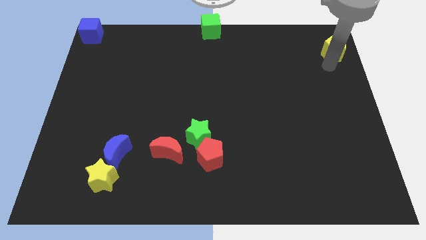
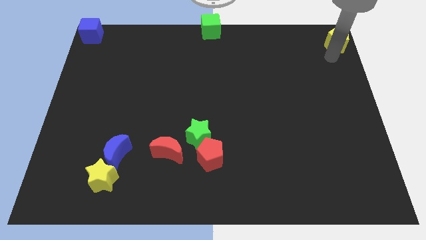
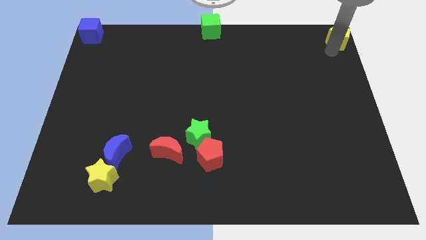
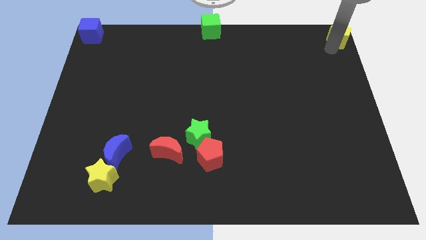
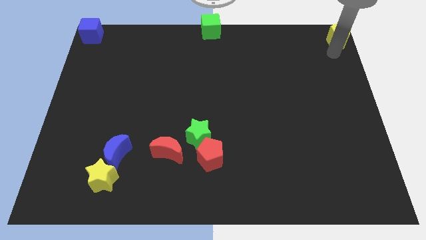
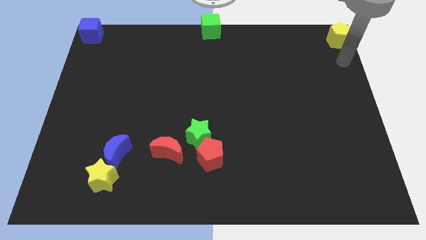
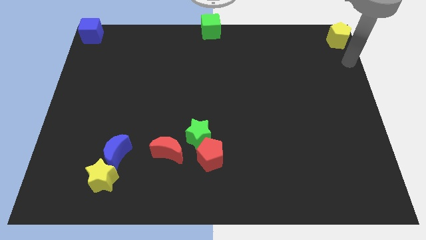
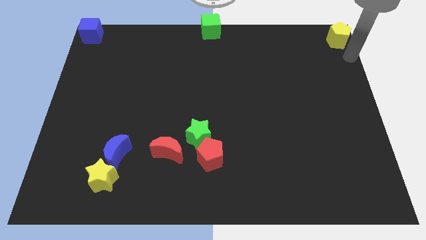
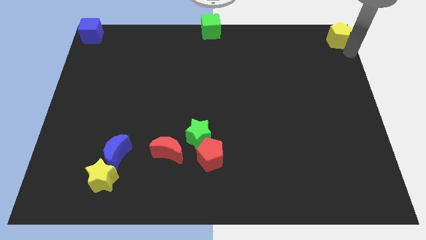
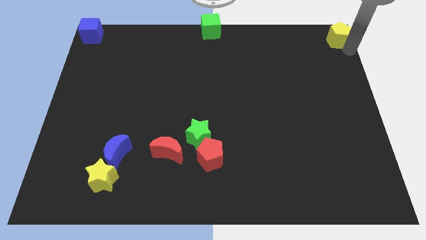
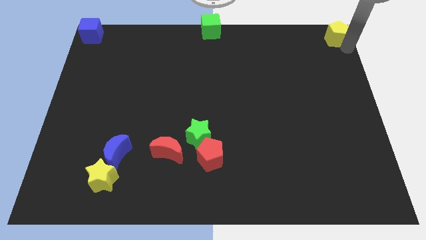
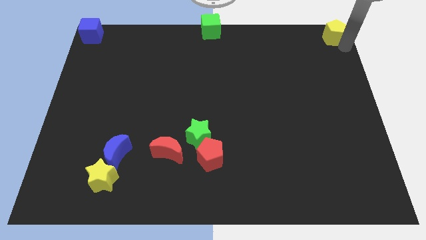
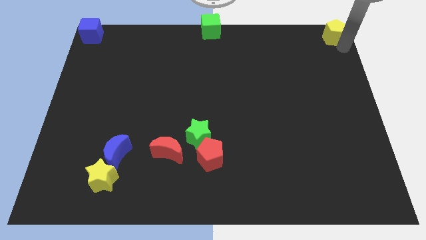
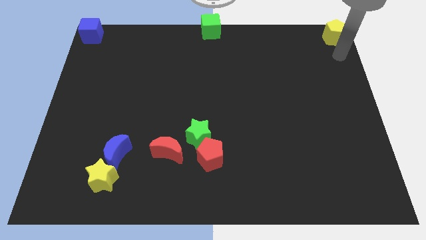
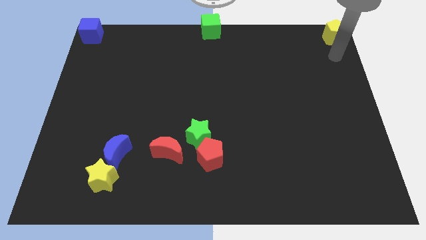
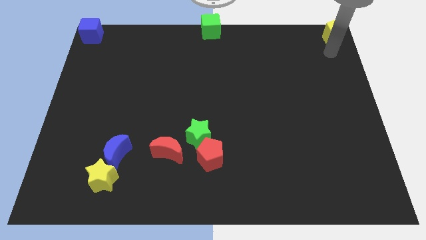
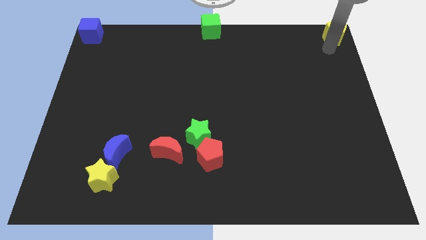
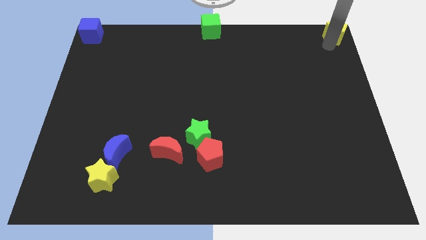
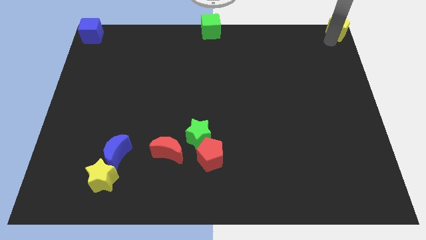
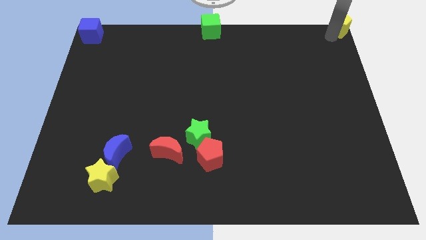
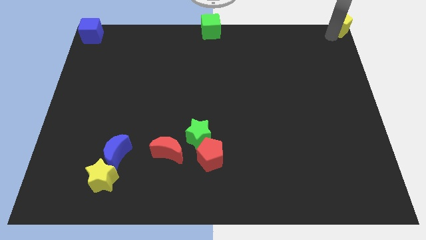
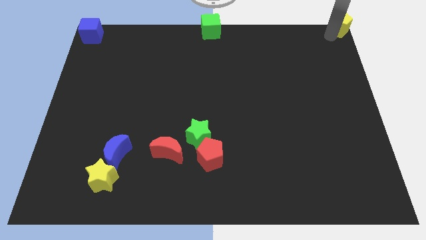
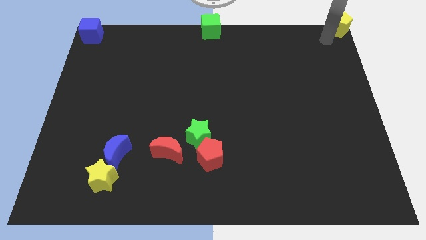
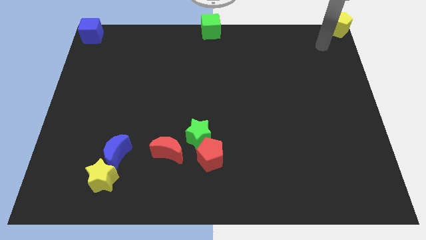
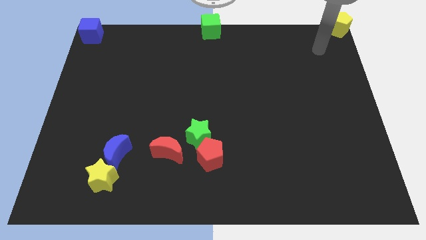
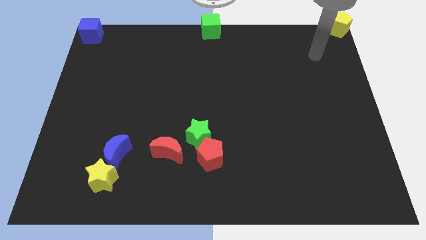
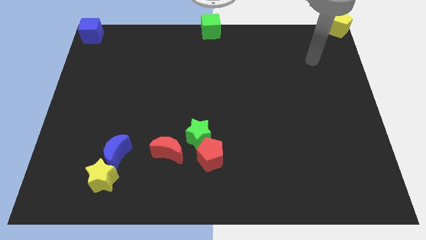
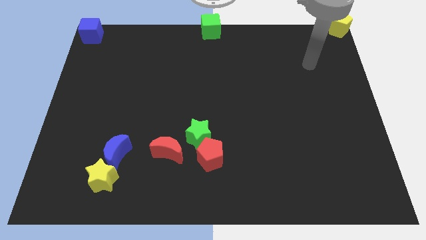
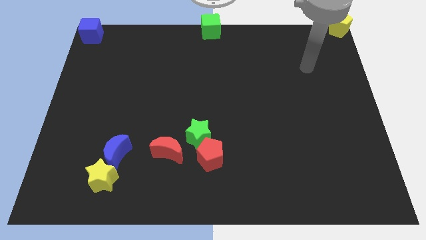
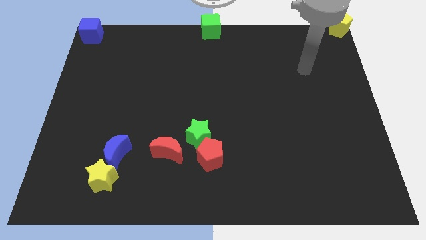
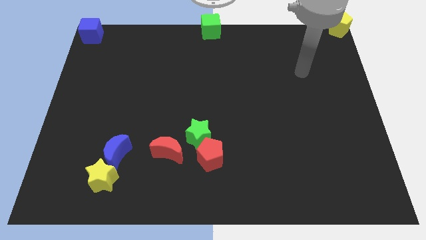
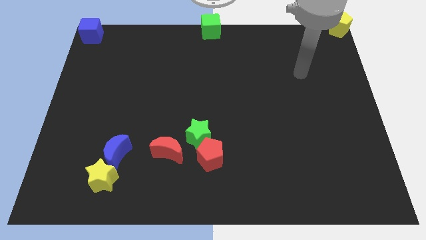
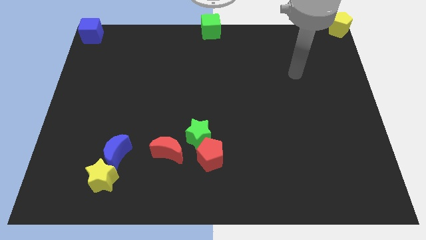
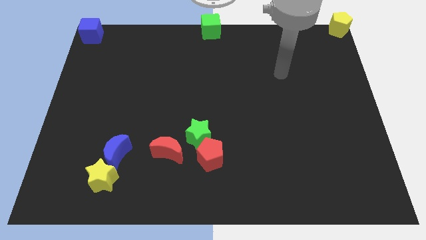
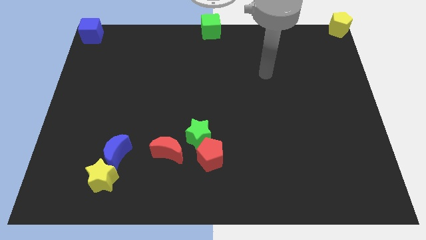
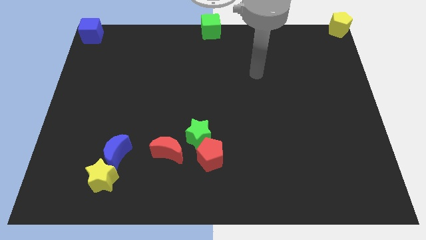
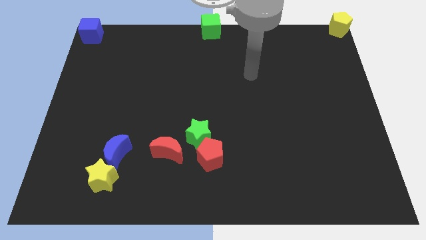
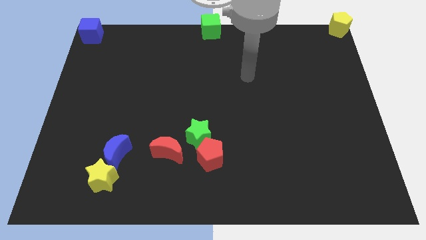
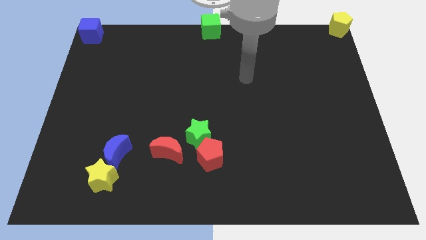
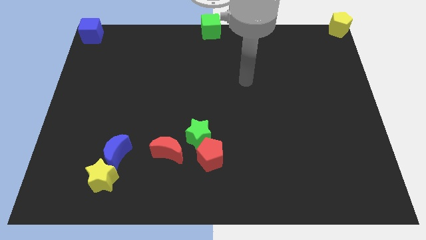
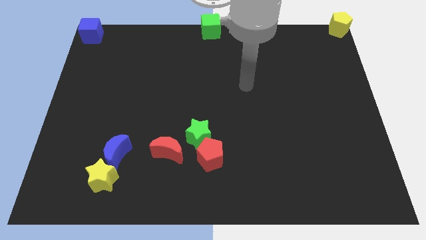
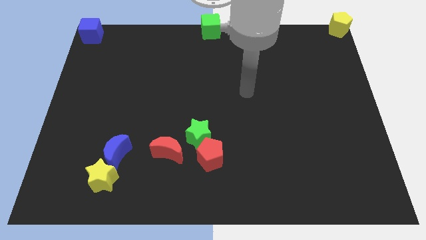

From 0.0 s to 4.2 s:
move your arm to the center of the board

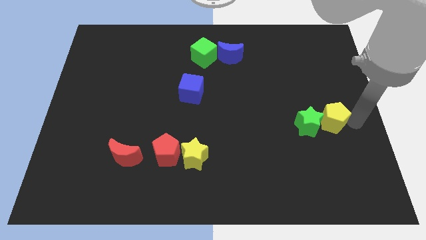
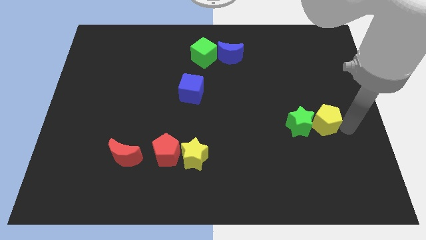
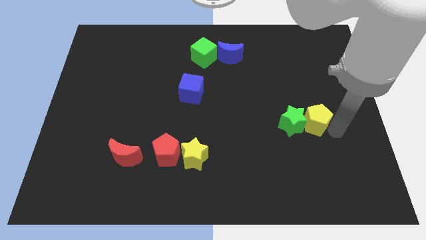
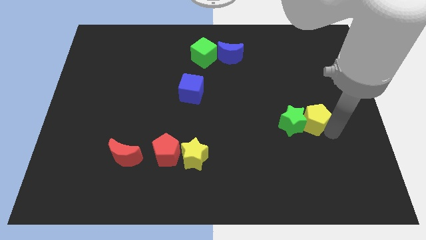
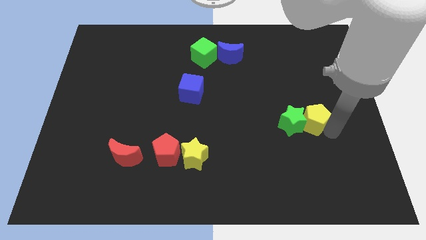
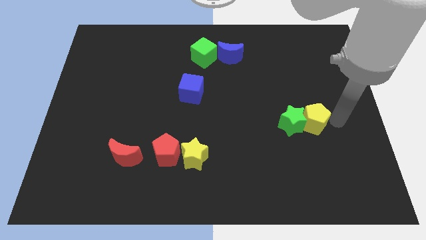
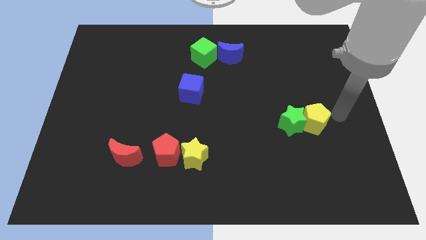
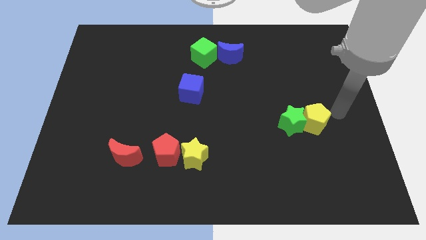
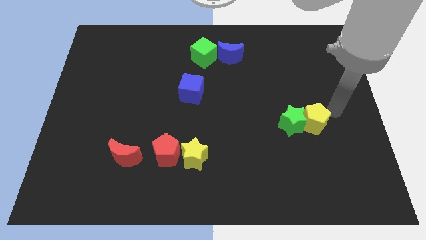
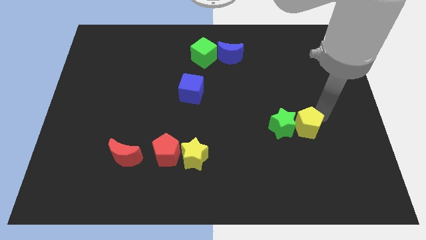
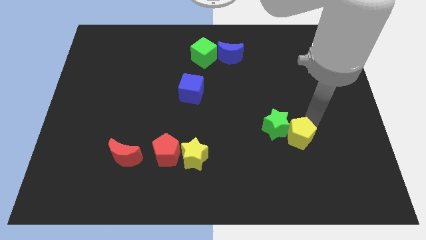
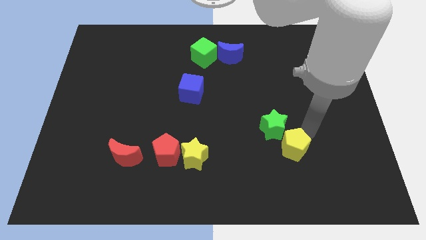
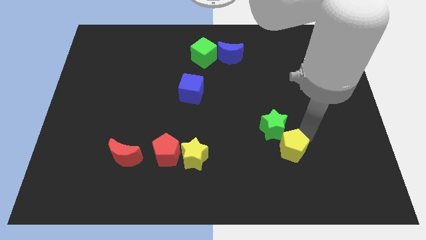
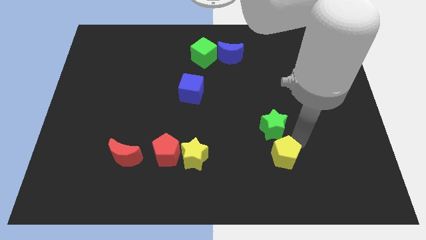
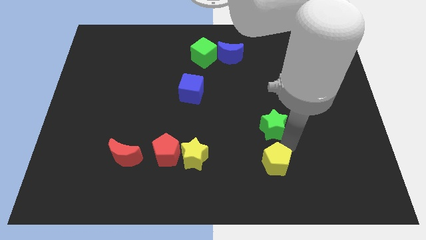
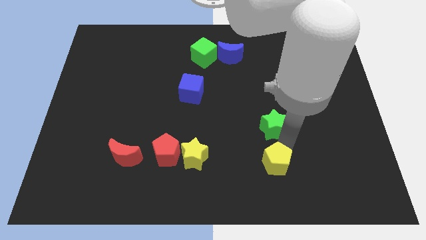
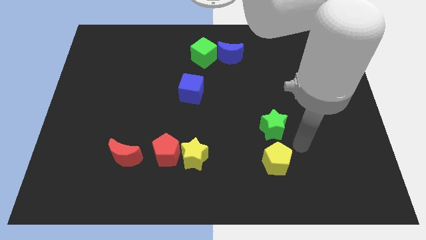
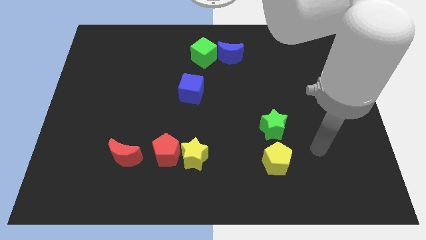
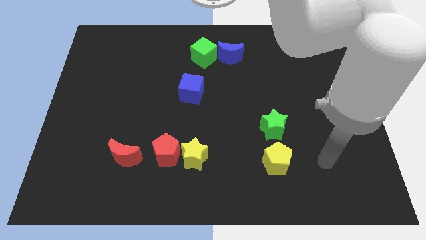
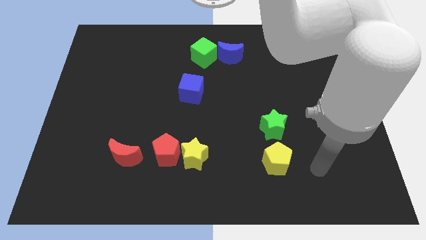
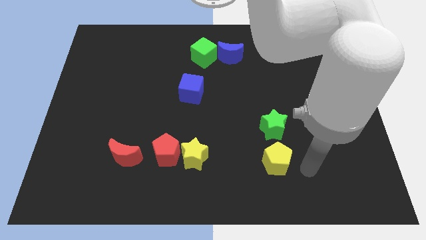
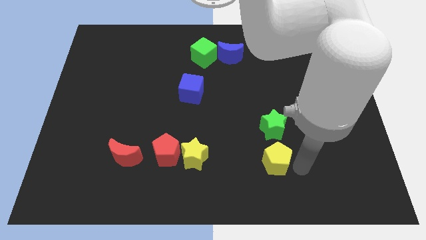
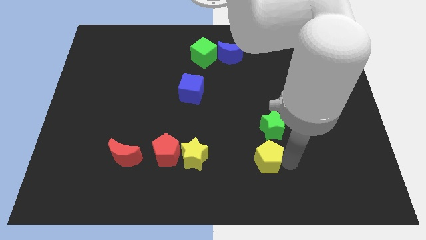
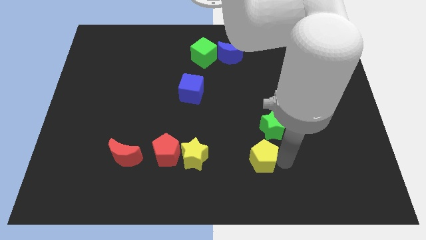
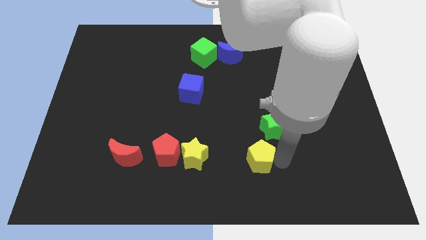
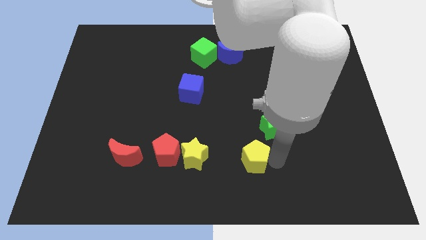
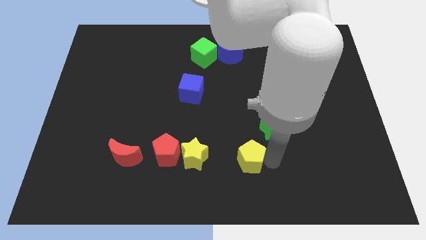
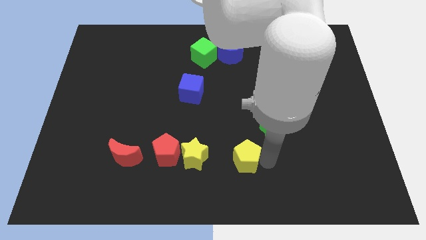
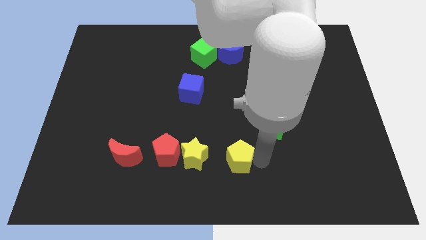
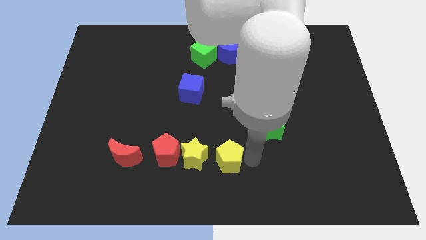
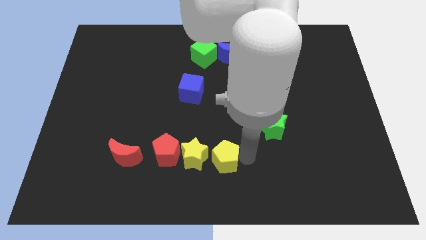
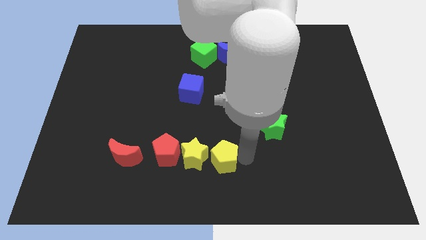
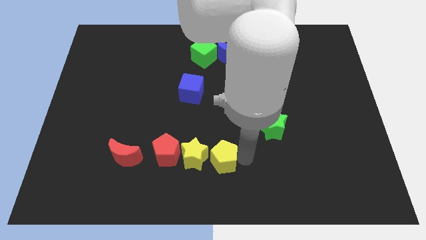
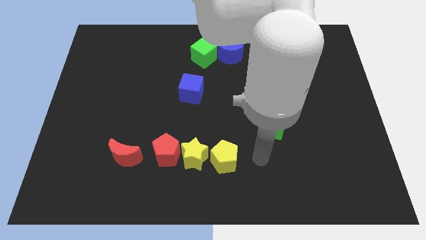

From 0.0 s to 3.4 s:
push yellow pentagon right to the yellow star

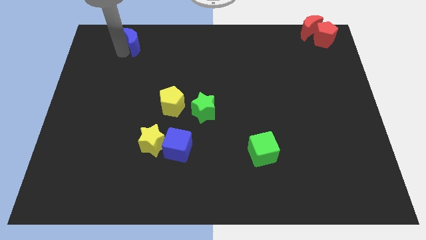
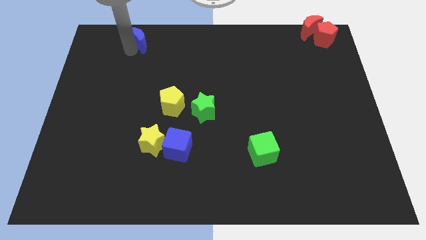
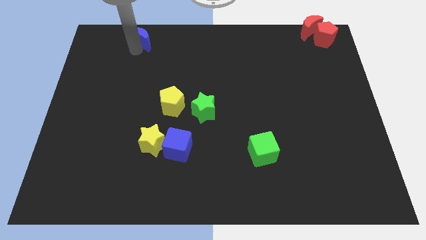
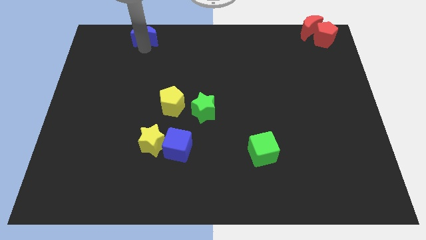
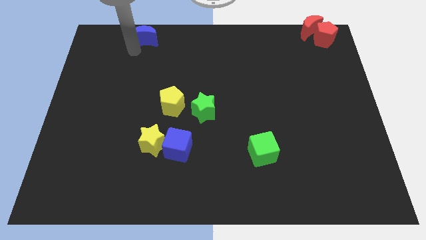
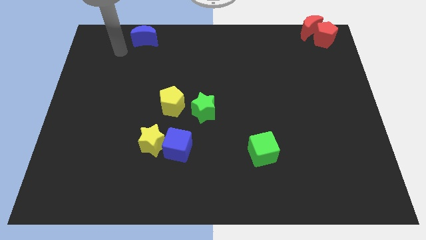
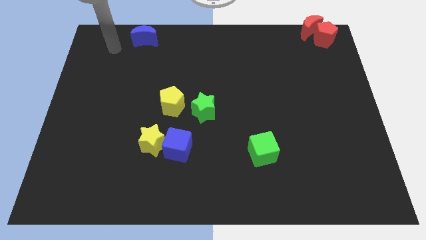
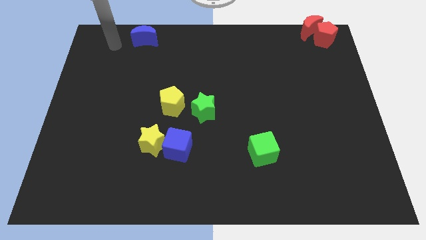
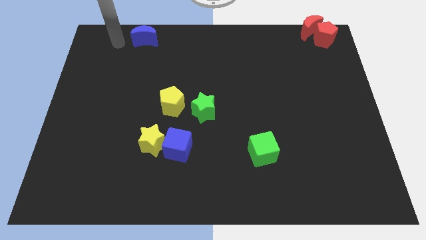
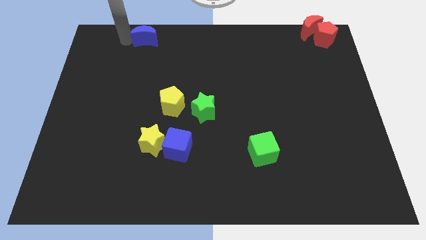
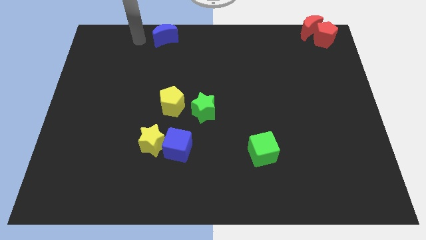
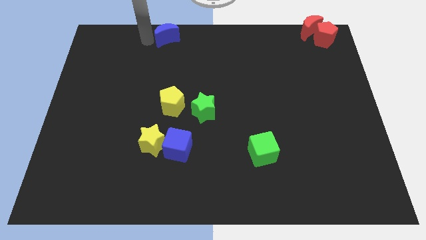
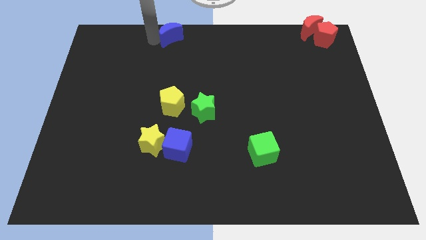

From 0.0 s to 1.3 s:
push the blue crescent to the top of the yellow pentagon
